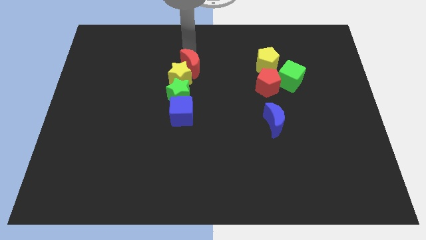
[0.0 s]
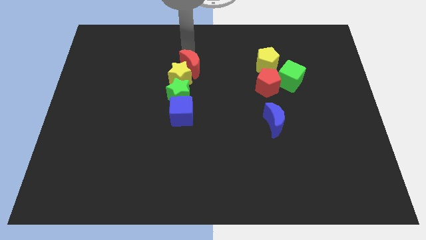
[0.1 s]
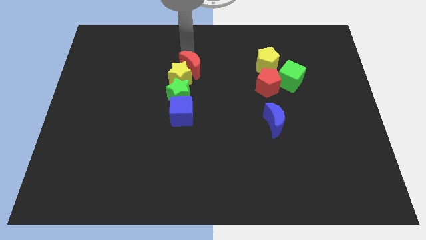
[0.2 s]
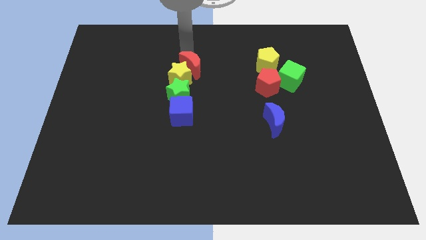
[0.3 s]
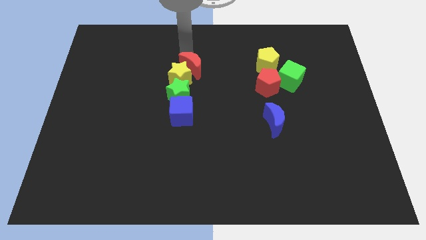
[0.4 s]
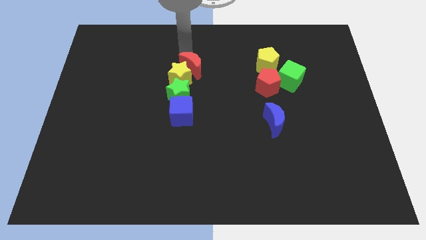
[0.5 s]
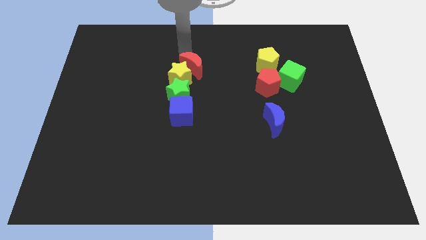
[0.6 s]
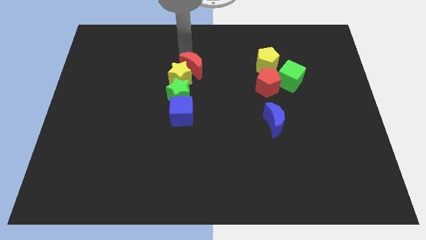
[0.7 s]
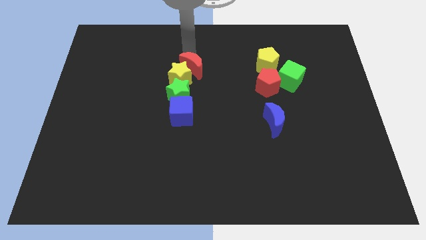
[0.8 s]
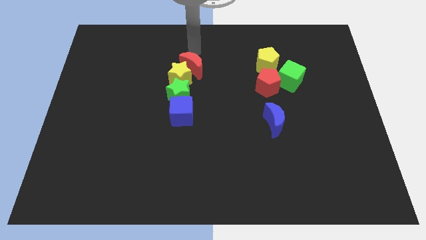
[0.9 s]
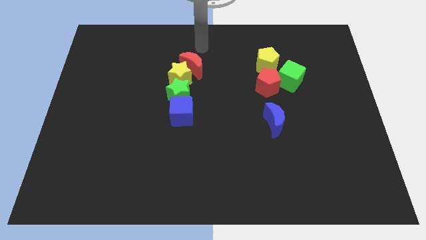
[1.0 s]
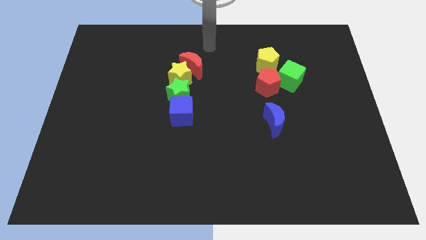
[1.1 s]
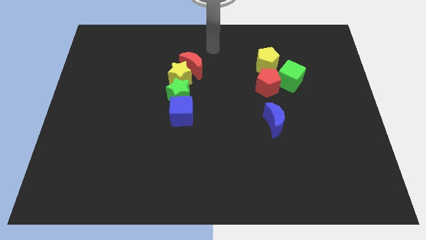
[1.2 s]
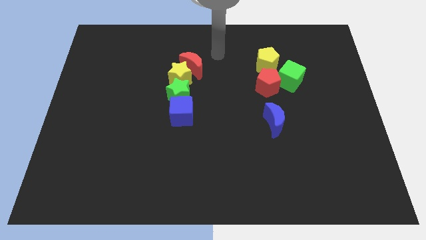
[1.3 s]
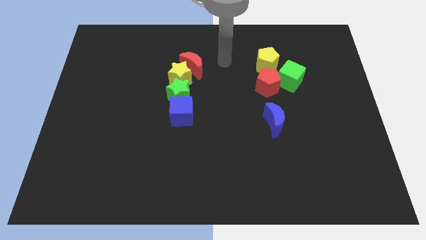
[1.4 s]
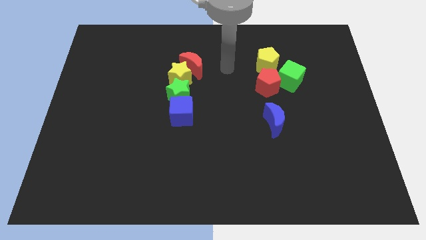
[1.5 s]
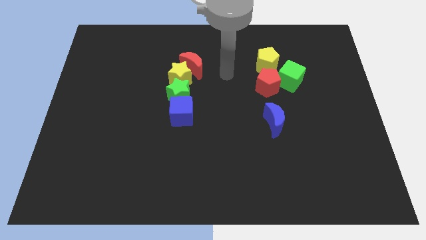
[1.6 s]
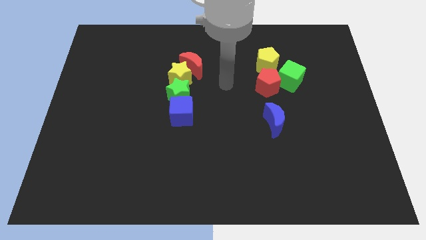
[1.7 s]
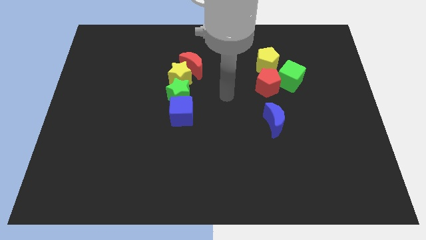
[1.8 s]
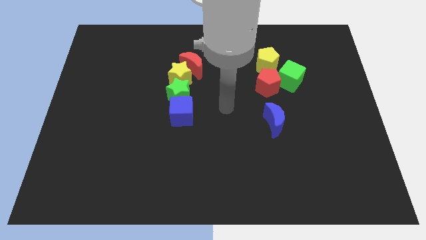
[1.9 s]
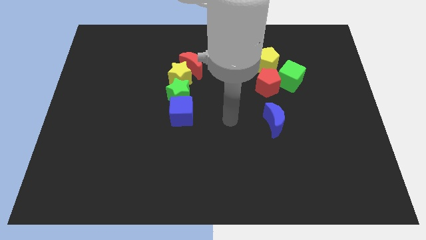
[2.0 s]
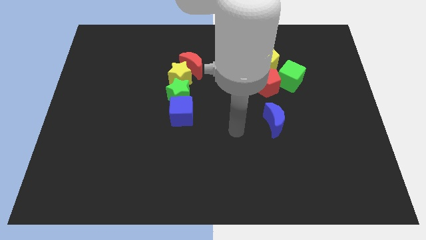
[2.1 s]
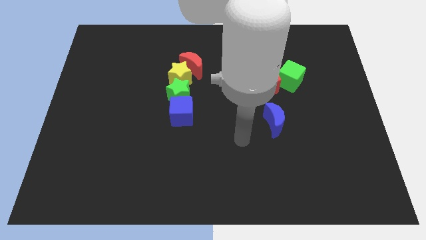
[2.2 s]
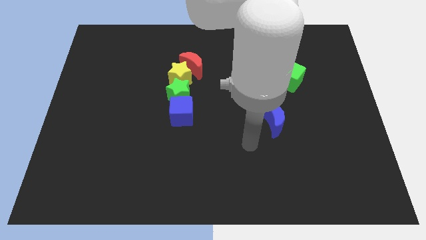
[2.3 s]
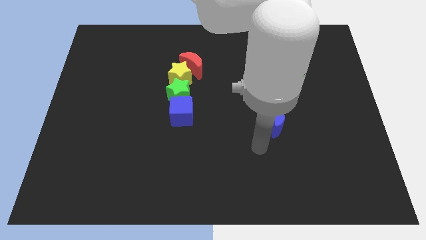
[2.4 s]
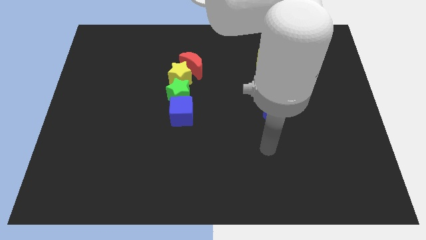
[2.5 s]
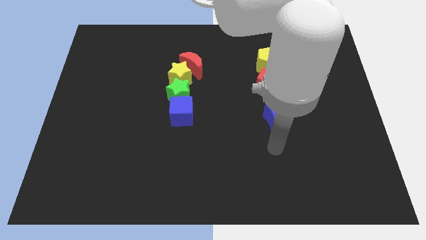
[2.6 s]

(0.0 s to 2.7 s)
move the arm below the blue crescent

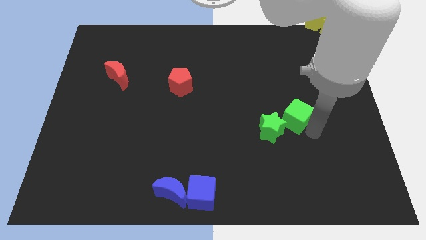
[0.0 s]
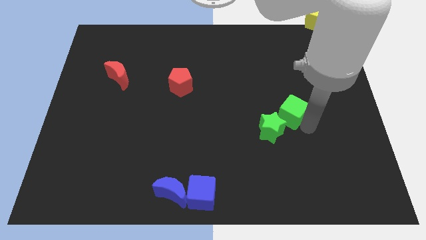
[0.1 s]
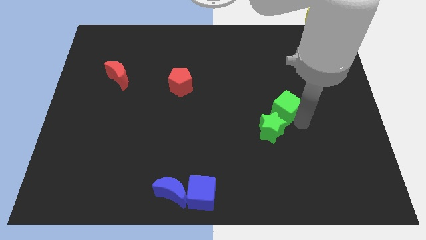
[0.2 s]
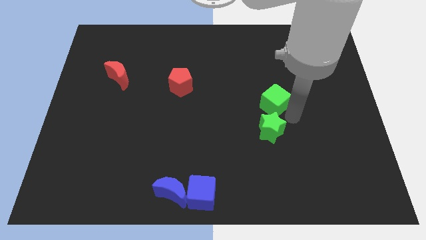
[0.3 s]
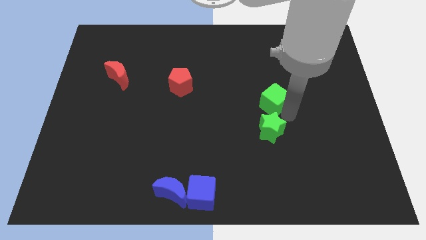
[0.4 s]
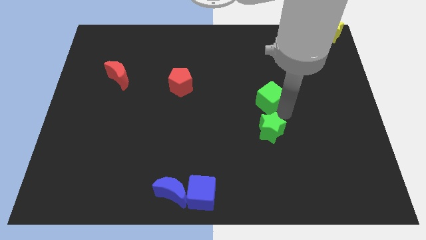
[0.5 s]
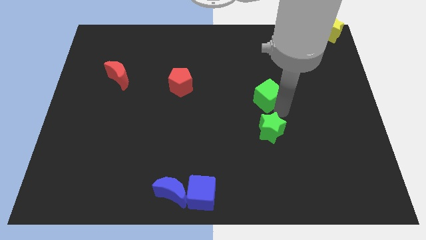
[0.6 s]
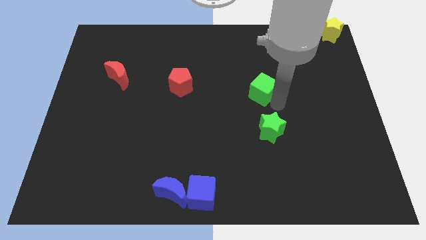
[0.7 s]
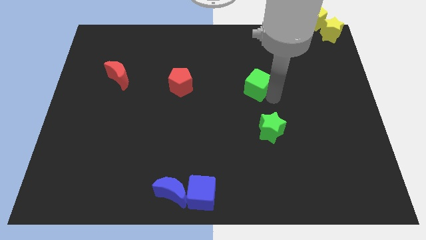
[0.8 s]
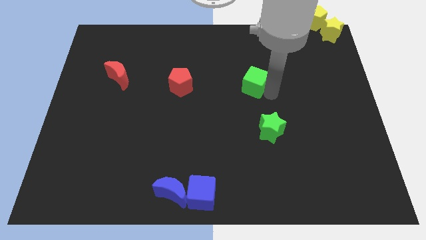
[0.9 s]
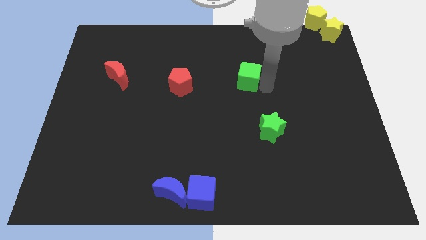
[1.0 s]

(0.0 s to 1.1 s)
separate green cube from green star

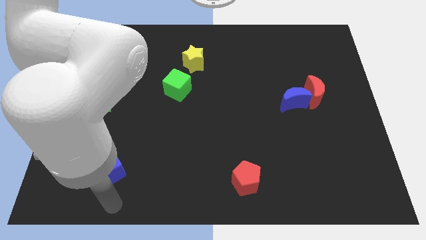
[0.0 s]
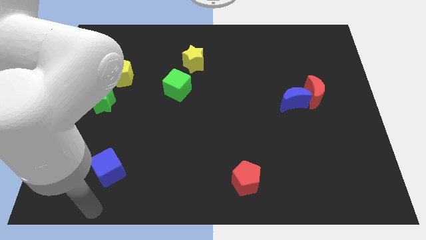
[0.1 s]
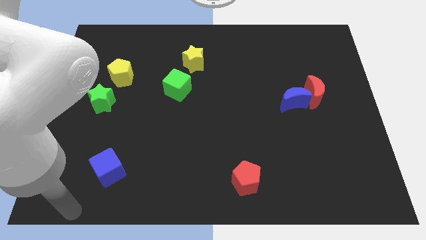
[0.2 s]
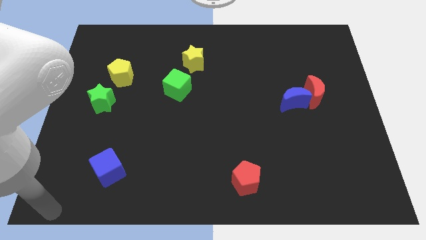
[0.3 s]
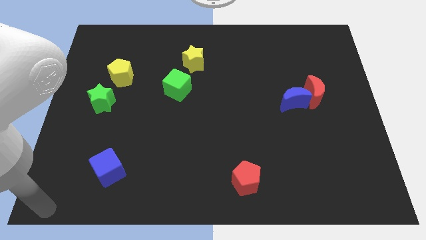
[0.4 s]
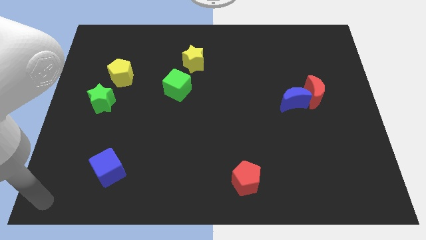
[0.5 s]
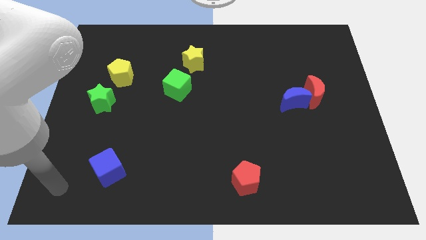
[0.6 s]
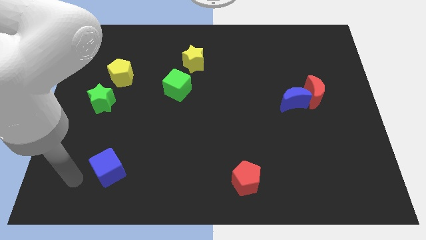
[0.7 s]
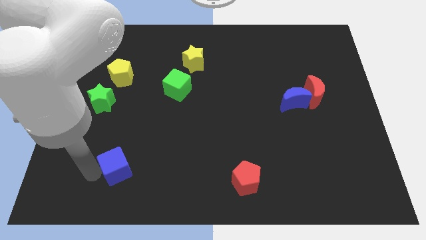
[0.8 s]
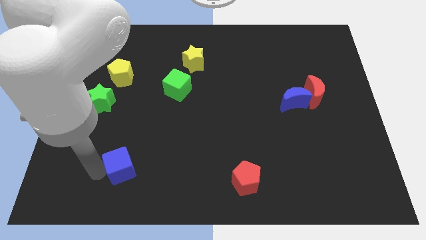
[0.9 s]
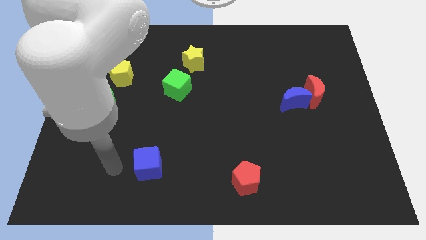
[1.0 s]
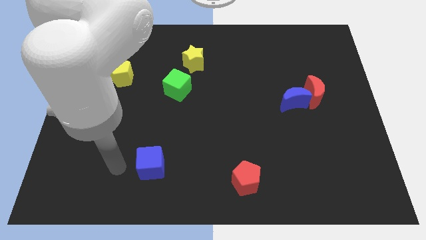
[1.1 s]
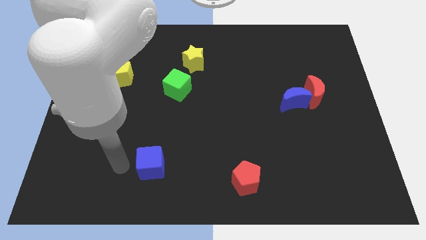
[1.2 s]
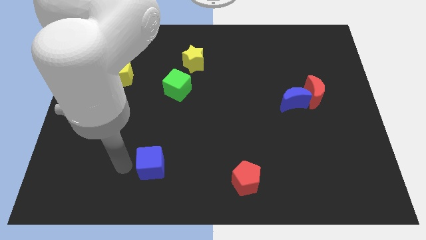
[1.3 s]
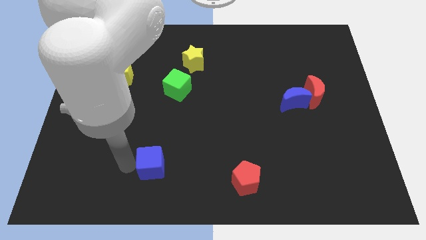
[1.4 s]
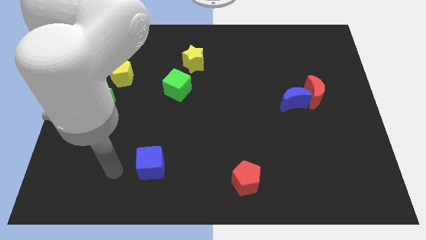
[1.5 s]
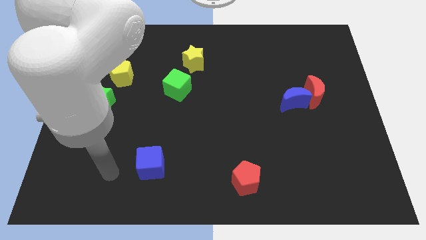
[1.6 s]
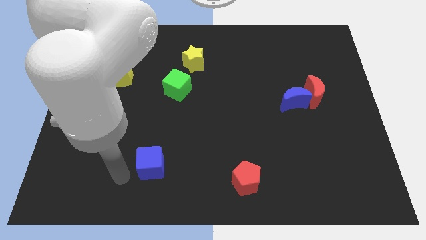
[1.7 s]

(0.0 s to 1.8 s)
push the blue cube slightly to the right

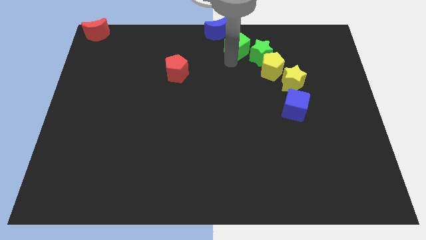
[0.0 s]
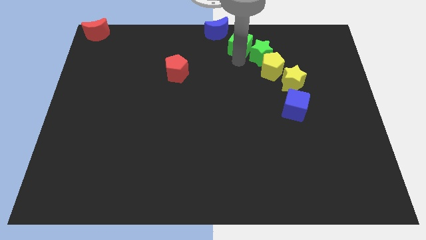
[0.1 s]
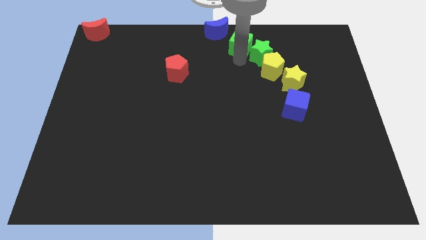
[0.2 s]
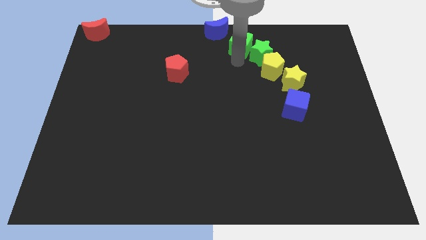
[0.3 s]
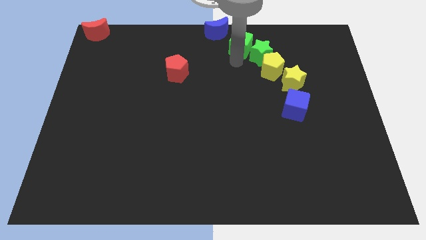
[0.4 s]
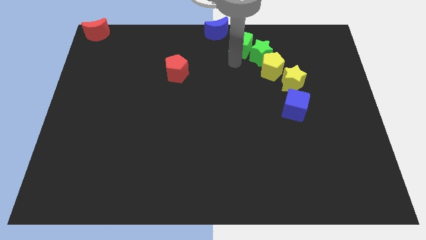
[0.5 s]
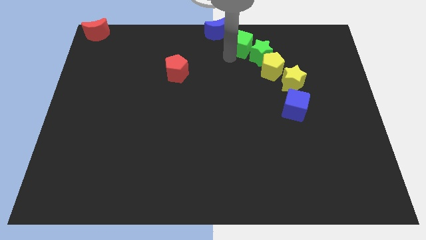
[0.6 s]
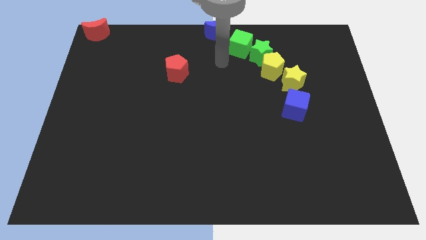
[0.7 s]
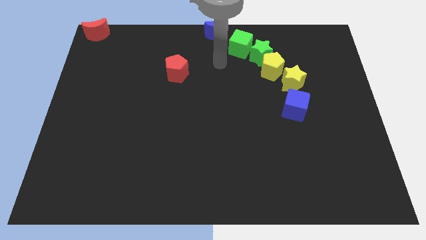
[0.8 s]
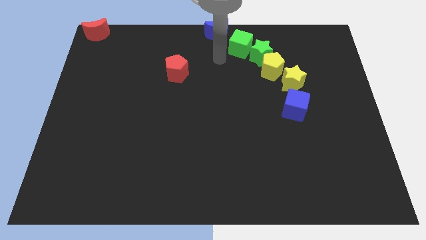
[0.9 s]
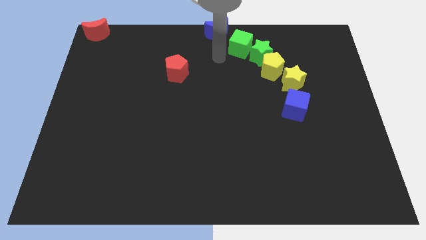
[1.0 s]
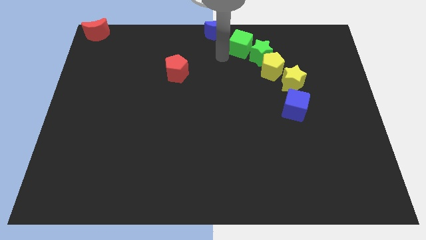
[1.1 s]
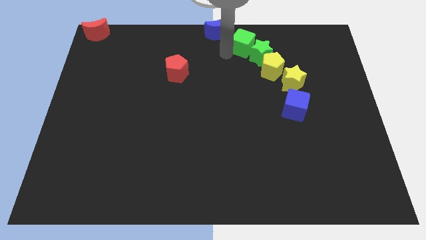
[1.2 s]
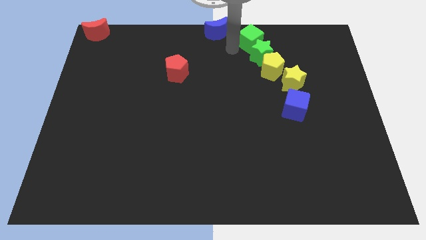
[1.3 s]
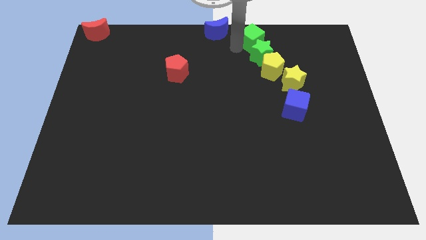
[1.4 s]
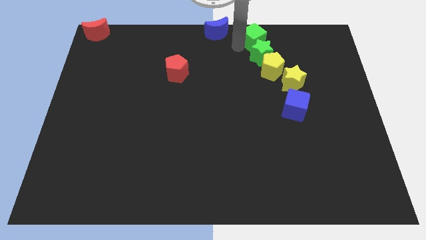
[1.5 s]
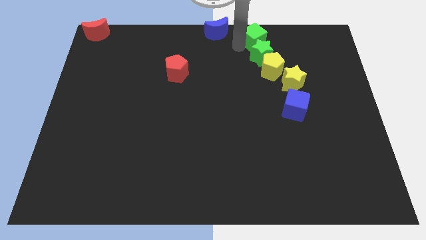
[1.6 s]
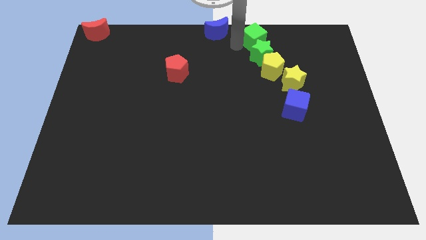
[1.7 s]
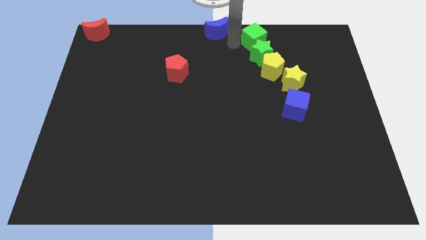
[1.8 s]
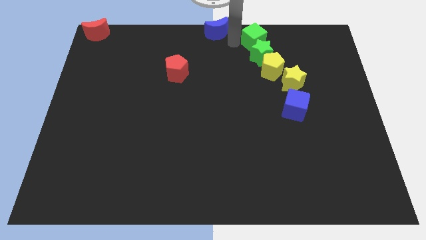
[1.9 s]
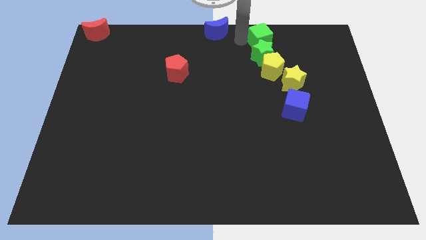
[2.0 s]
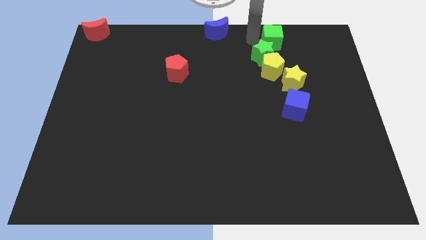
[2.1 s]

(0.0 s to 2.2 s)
move the green cube into the top side of the green star

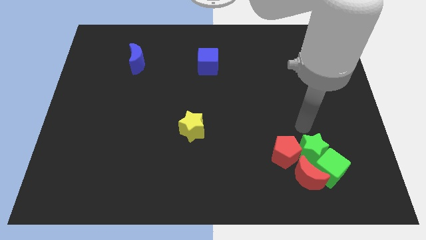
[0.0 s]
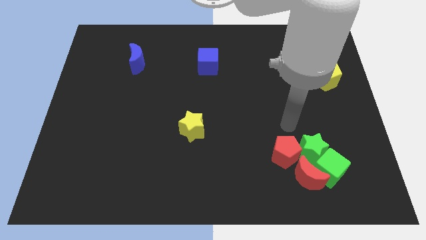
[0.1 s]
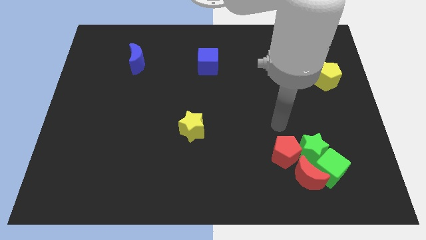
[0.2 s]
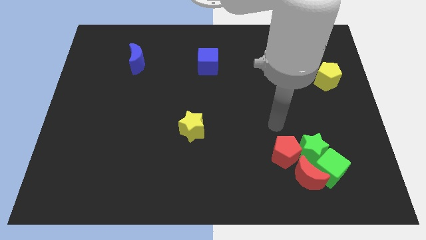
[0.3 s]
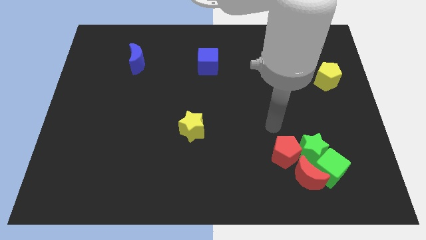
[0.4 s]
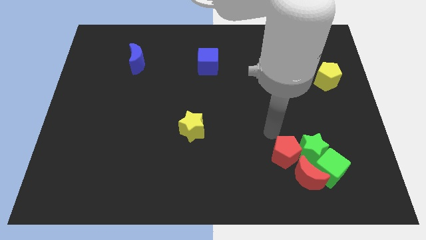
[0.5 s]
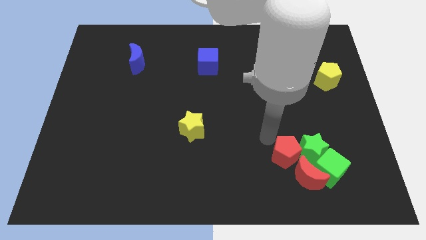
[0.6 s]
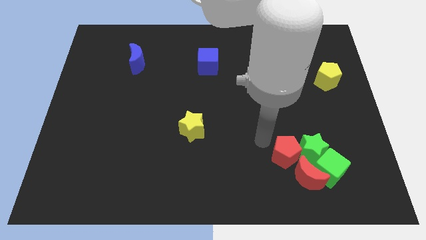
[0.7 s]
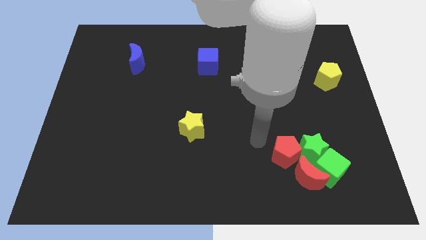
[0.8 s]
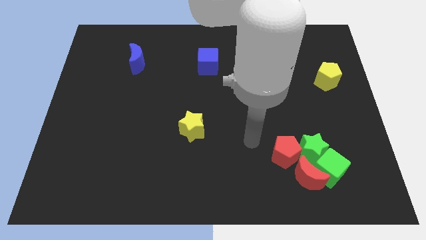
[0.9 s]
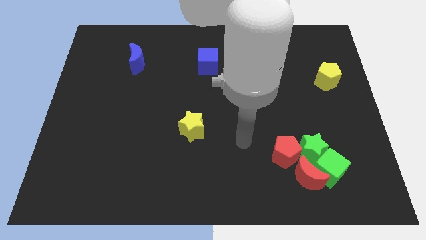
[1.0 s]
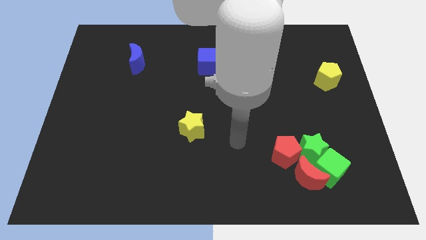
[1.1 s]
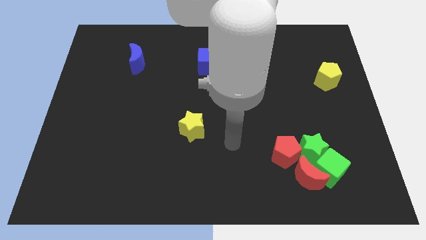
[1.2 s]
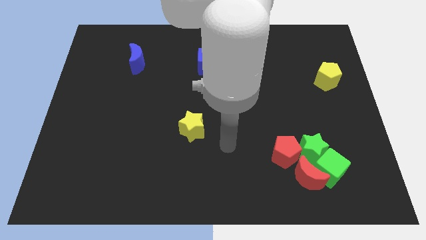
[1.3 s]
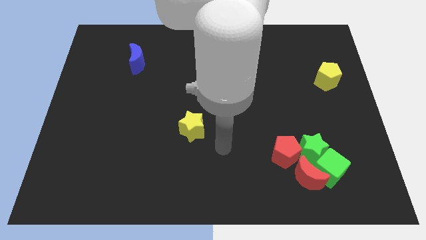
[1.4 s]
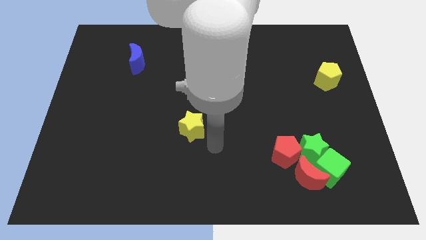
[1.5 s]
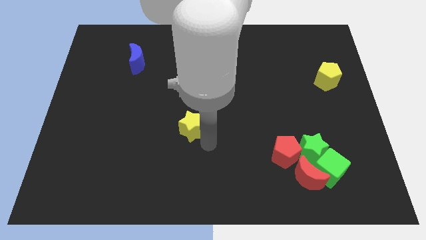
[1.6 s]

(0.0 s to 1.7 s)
move your arm towards the bottom right side of the yellow star
